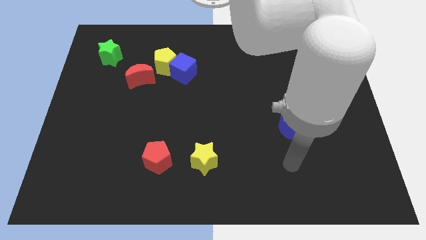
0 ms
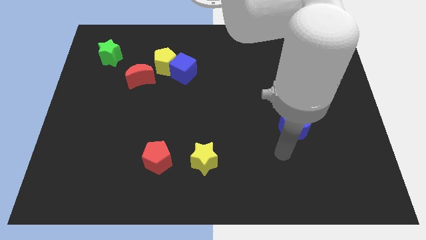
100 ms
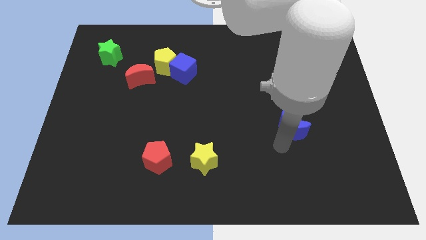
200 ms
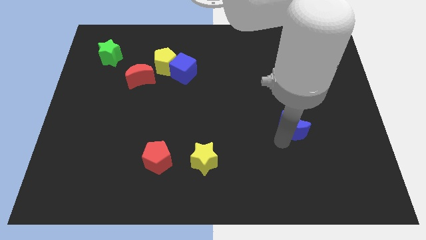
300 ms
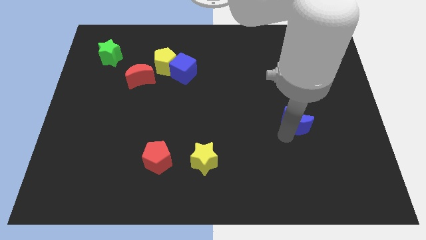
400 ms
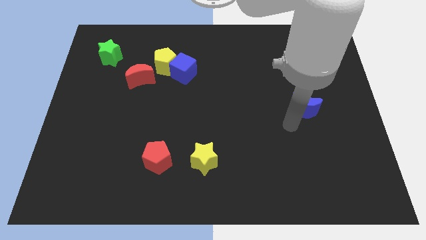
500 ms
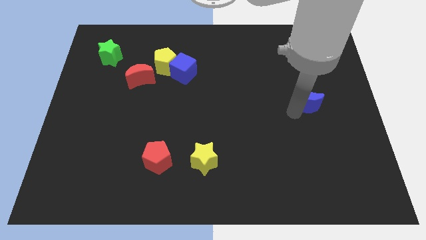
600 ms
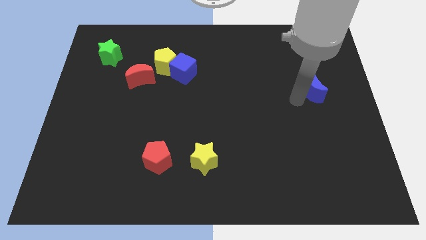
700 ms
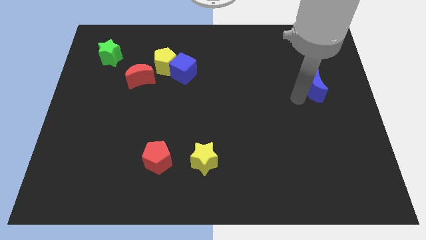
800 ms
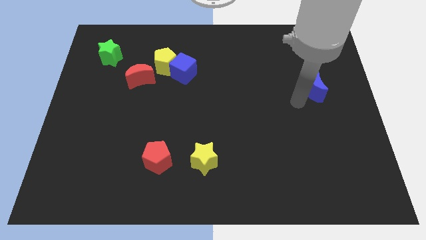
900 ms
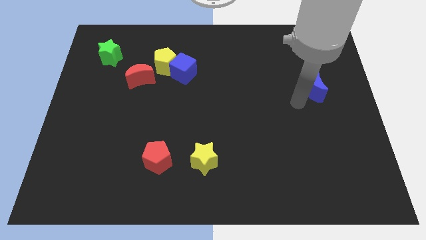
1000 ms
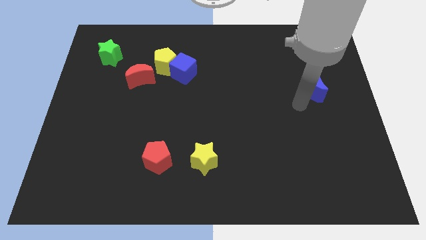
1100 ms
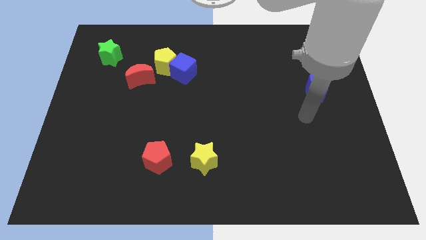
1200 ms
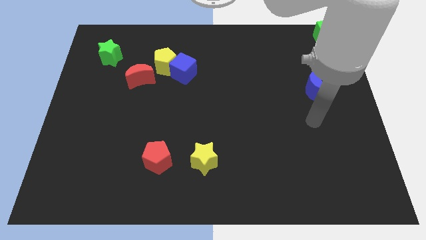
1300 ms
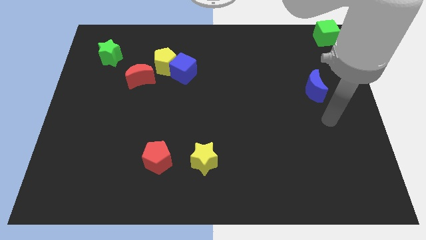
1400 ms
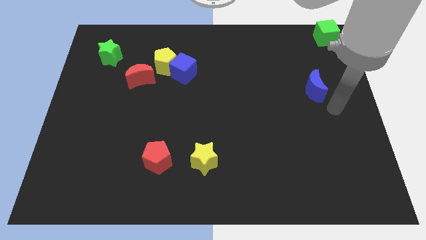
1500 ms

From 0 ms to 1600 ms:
slide the blue moon upwards

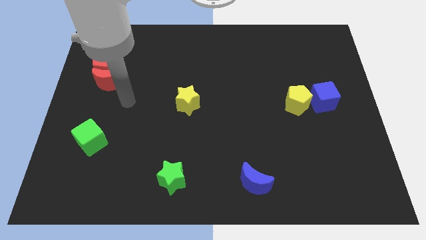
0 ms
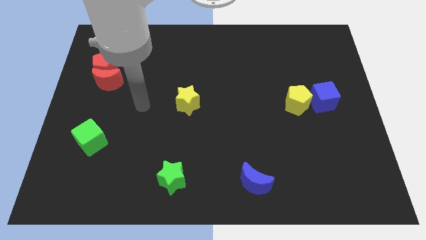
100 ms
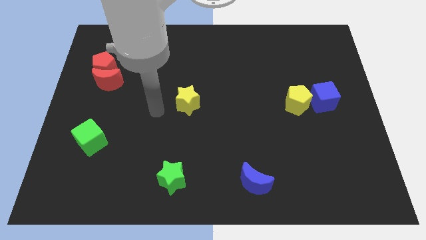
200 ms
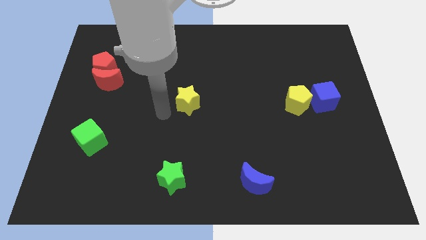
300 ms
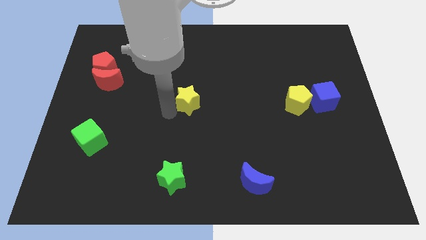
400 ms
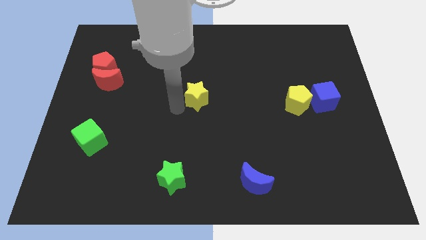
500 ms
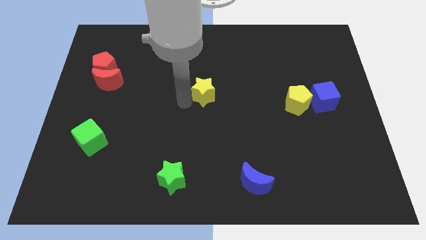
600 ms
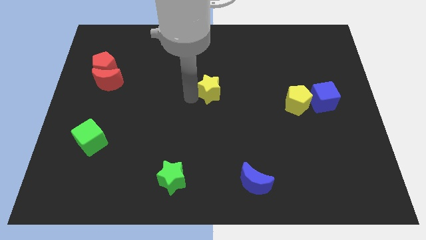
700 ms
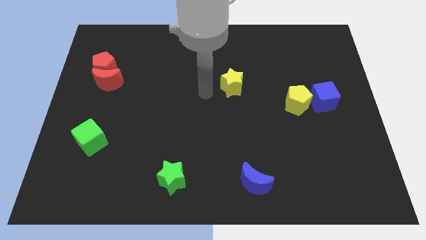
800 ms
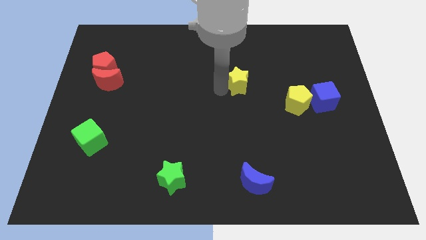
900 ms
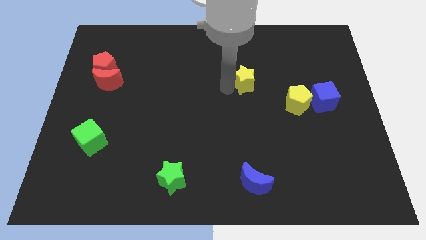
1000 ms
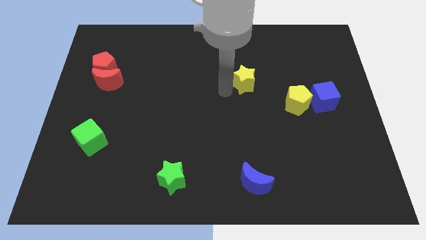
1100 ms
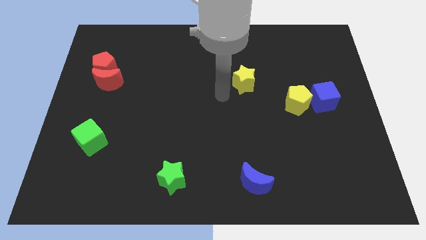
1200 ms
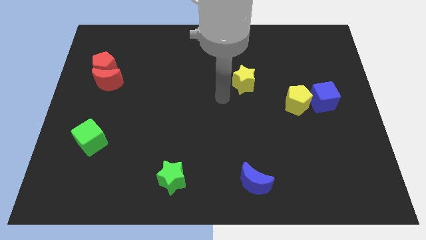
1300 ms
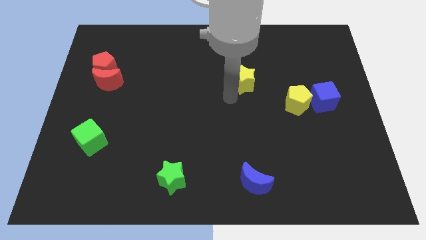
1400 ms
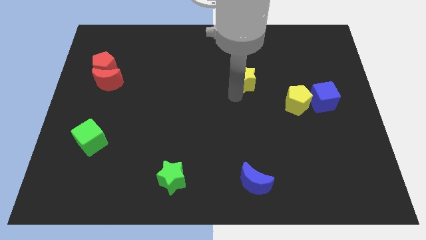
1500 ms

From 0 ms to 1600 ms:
place the yellow star diagonal to the yellow pentagon

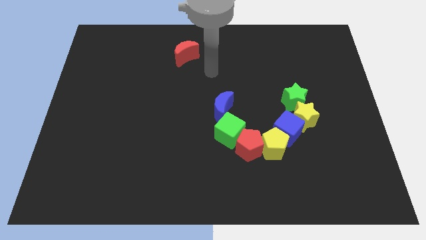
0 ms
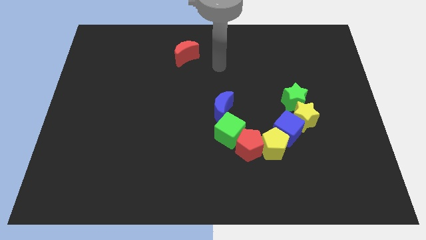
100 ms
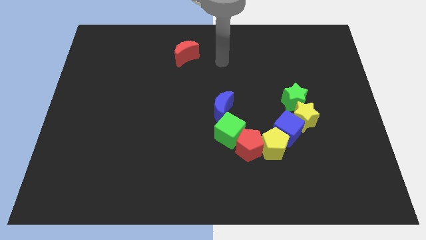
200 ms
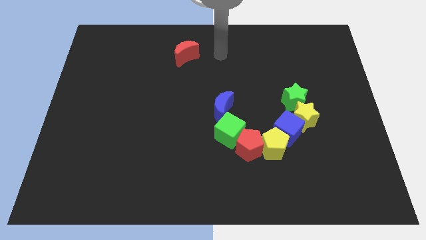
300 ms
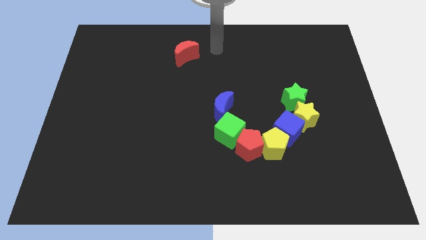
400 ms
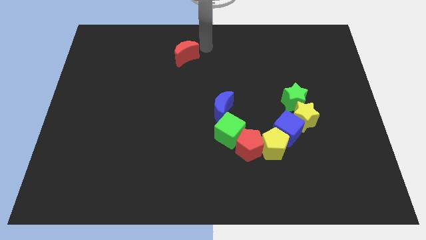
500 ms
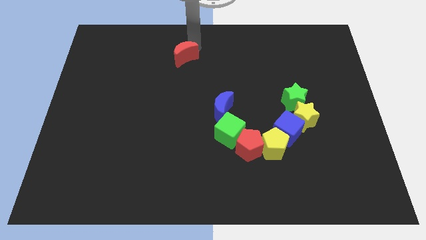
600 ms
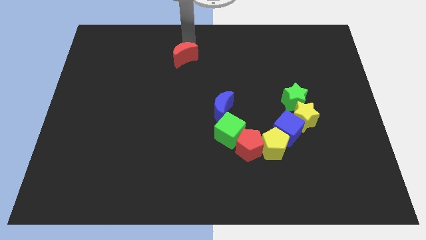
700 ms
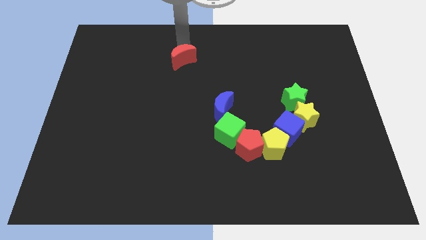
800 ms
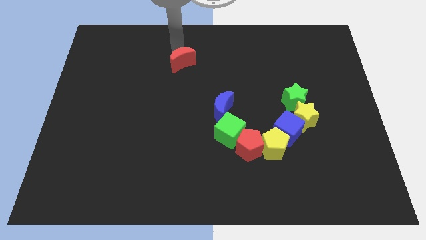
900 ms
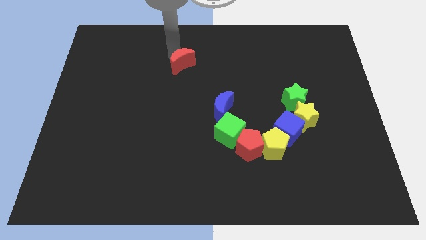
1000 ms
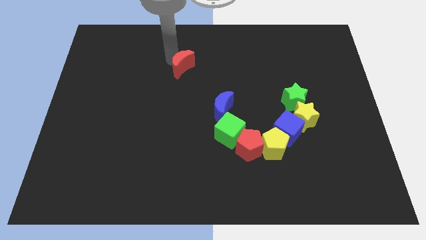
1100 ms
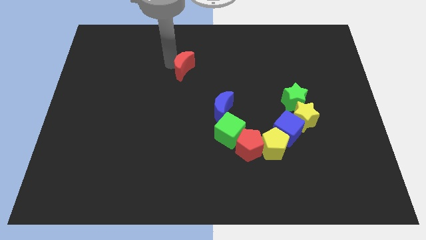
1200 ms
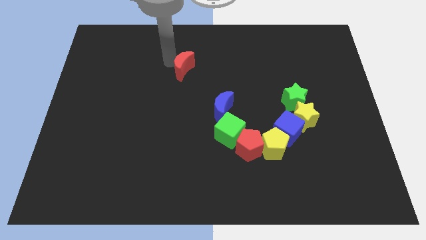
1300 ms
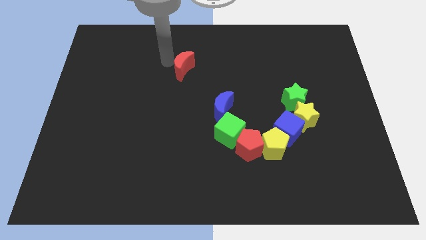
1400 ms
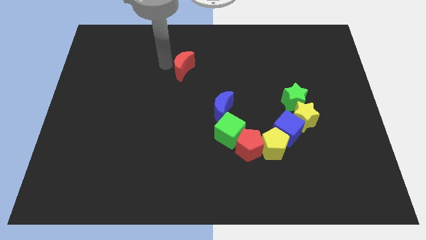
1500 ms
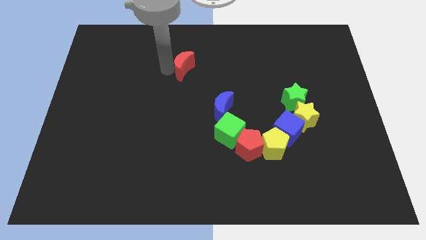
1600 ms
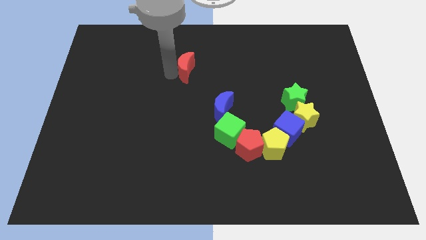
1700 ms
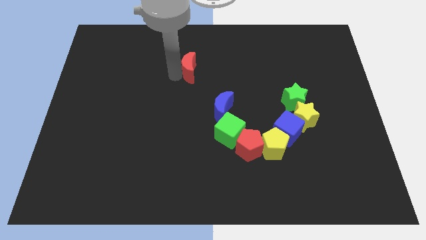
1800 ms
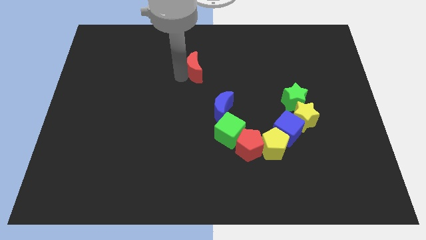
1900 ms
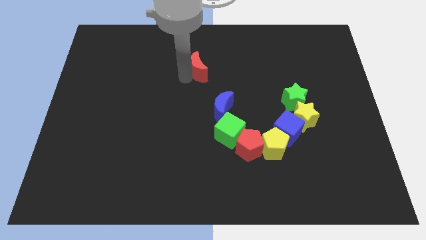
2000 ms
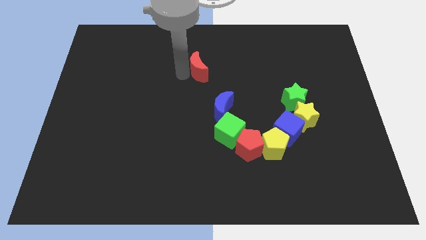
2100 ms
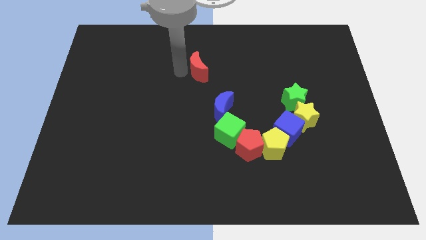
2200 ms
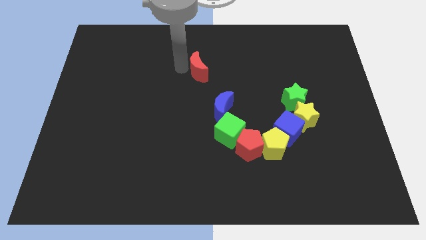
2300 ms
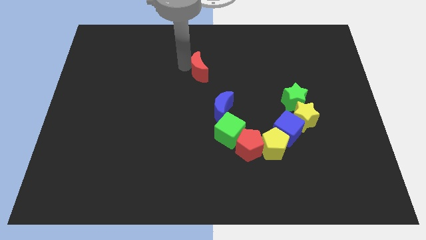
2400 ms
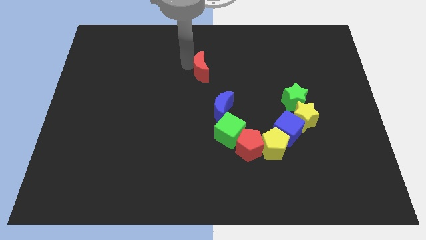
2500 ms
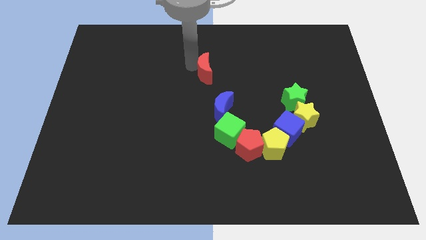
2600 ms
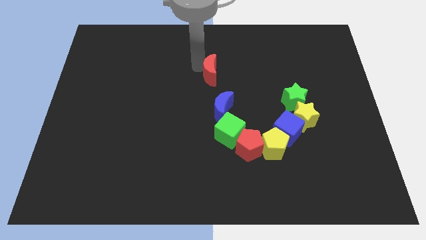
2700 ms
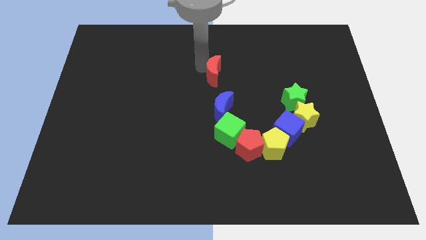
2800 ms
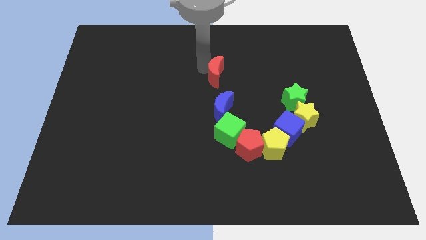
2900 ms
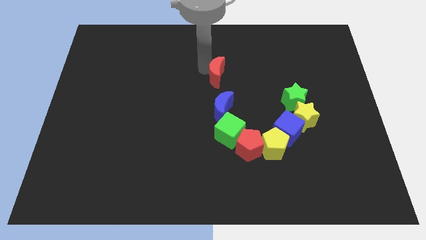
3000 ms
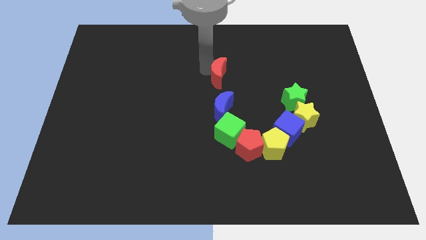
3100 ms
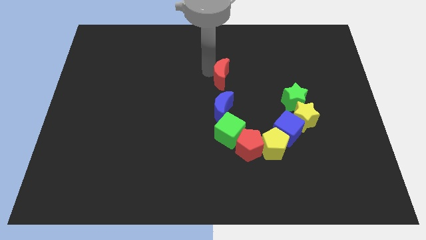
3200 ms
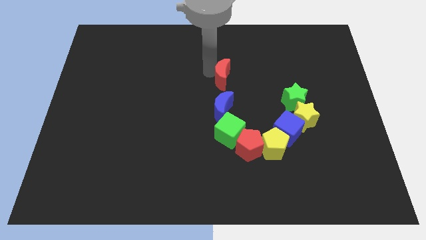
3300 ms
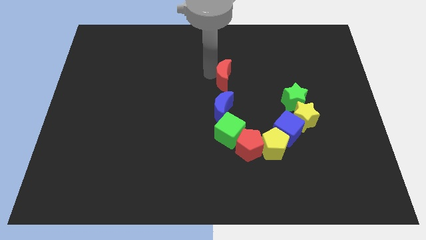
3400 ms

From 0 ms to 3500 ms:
place the red moon above the blue moon

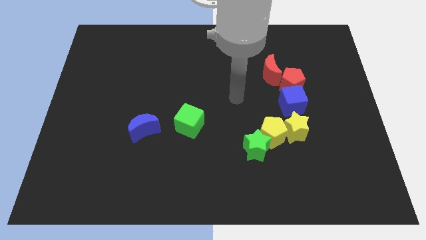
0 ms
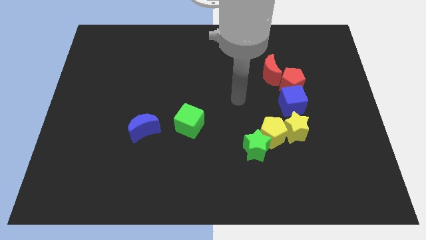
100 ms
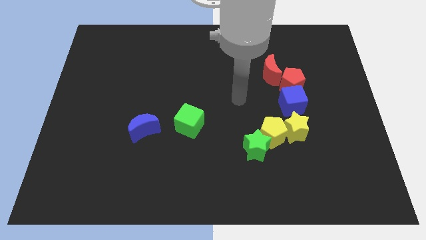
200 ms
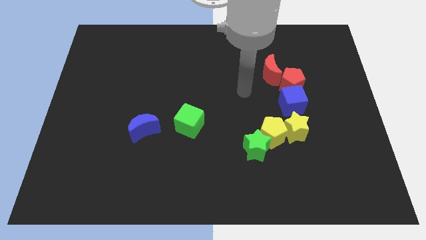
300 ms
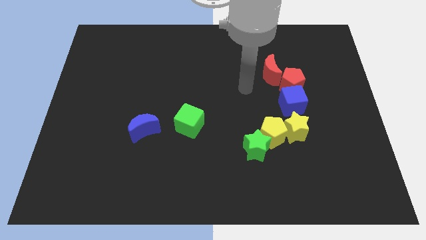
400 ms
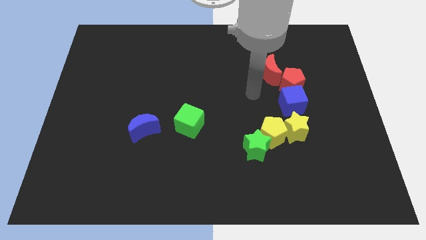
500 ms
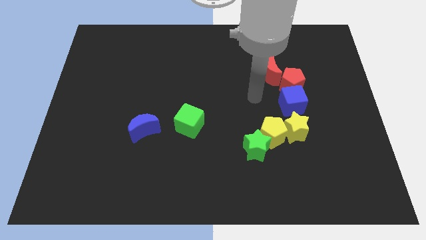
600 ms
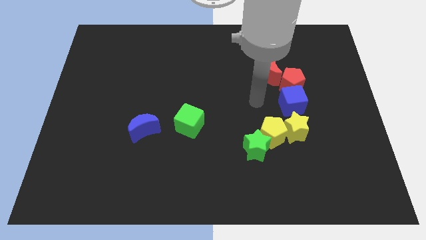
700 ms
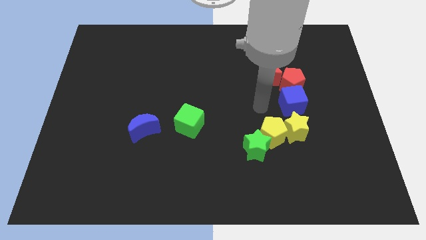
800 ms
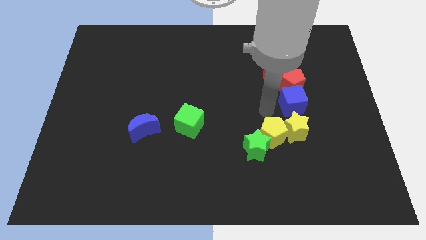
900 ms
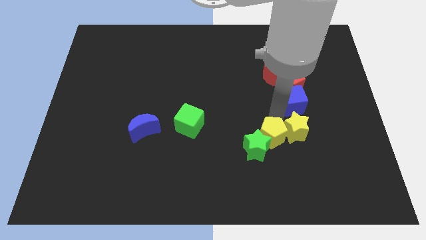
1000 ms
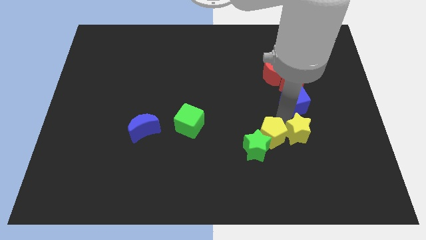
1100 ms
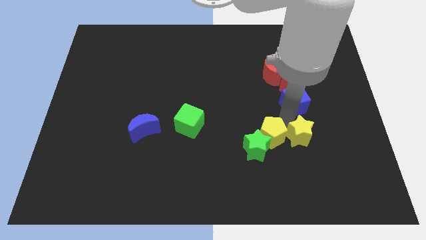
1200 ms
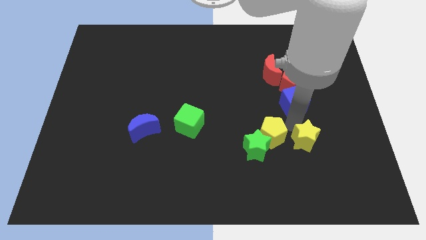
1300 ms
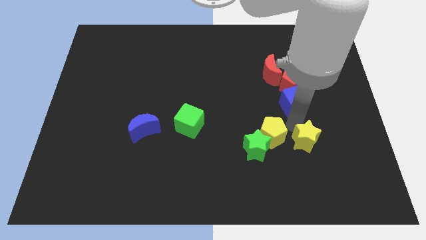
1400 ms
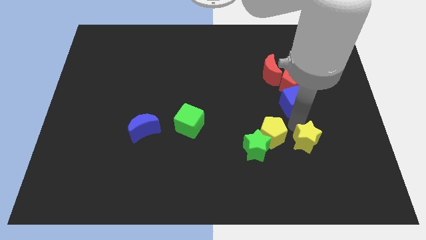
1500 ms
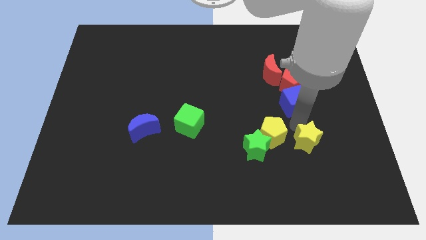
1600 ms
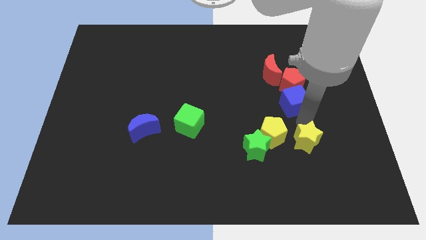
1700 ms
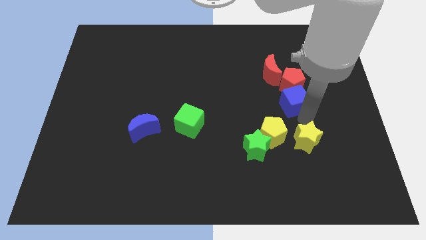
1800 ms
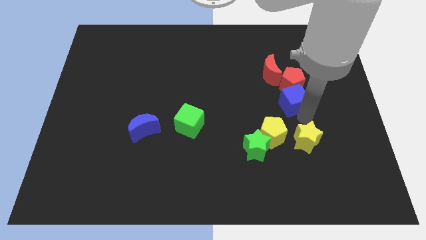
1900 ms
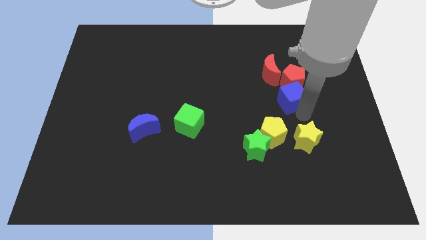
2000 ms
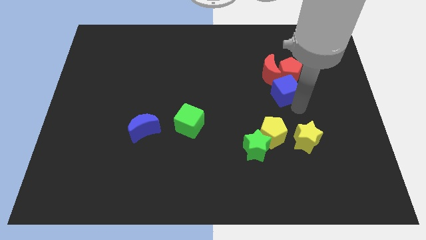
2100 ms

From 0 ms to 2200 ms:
separate the yellow blocks
